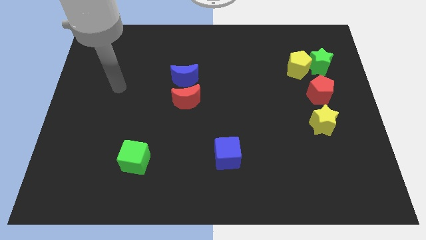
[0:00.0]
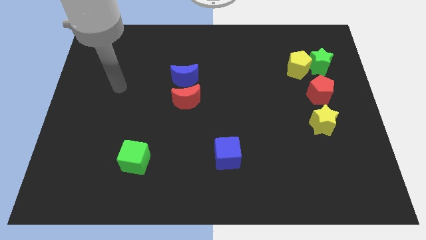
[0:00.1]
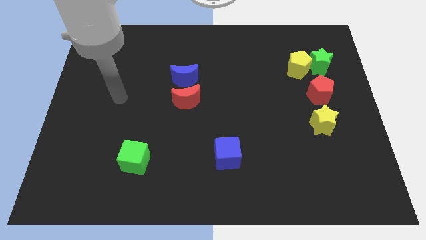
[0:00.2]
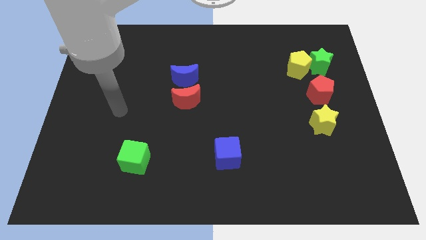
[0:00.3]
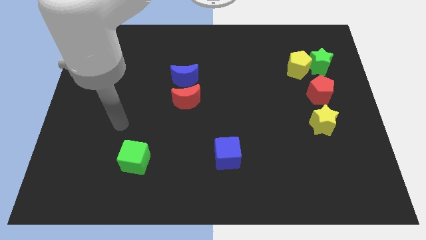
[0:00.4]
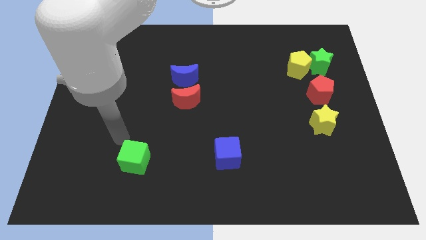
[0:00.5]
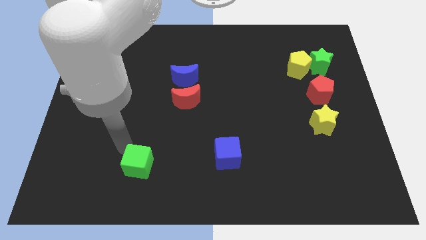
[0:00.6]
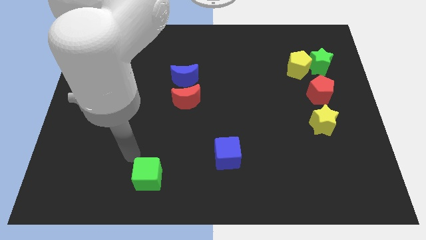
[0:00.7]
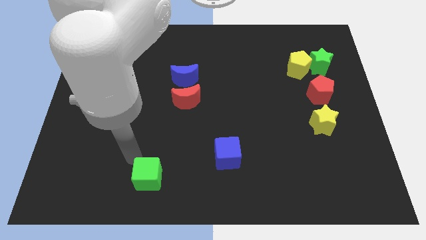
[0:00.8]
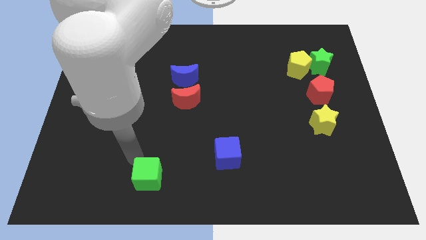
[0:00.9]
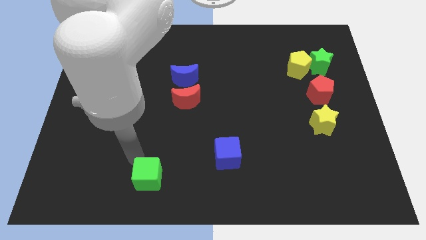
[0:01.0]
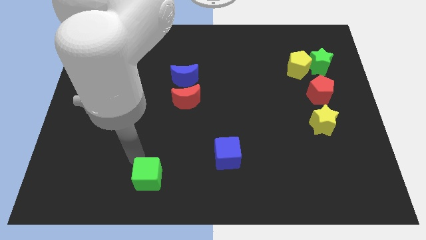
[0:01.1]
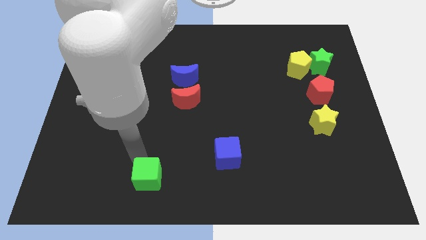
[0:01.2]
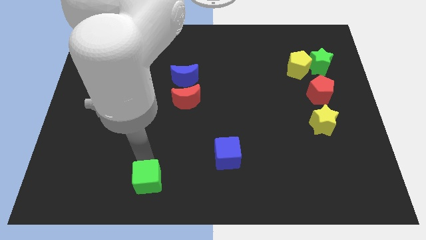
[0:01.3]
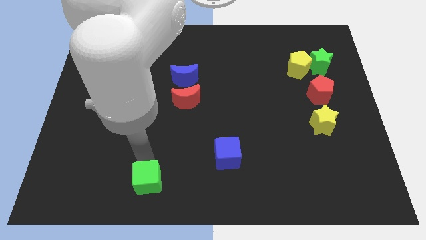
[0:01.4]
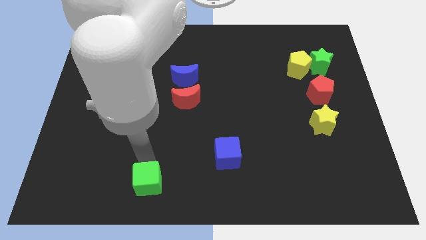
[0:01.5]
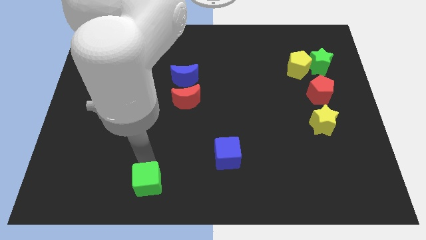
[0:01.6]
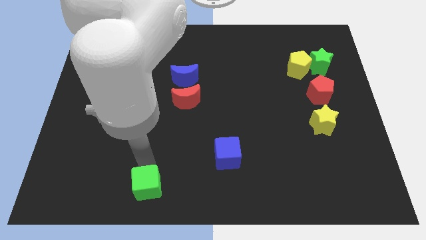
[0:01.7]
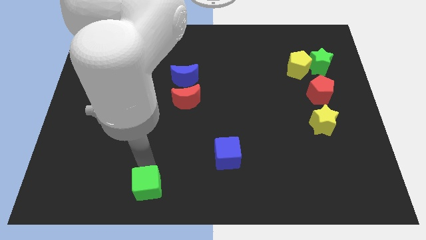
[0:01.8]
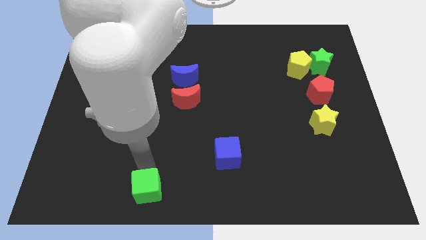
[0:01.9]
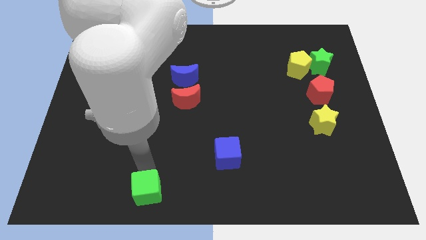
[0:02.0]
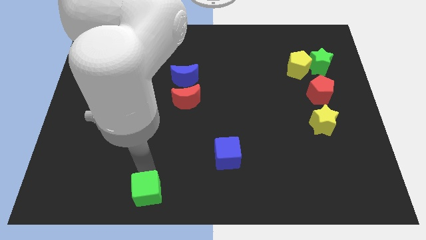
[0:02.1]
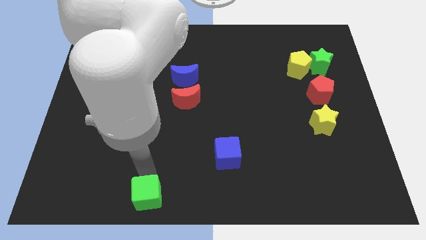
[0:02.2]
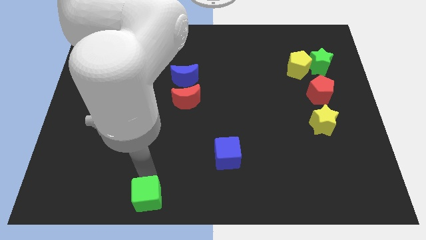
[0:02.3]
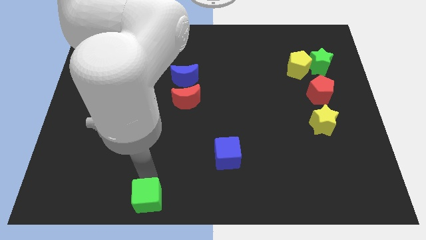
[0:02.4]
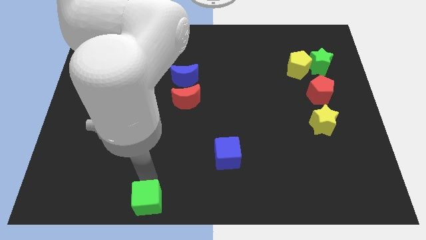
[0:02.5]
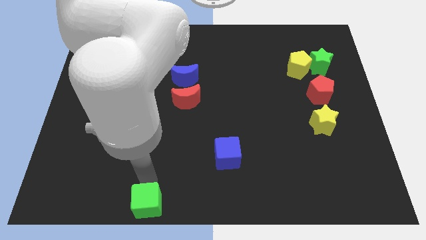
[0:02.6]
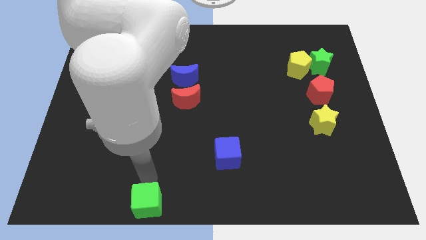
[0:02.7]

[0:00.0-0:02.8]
push the green cube to the bottom

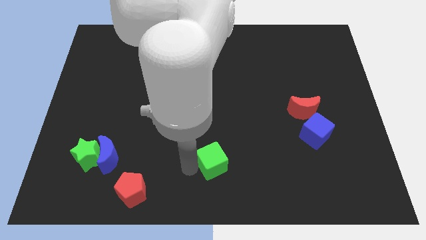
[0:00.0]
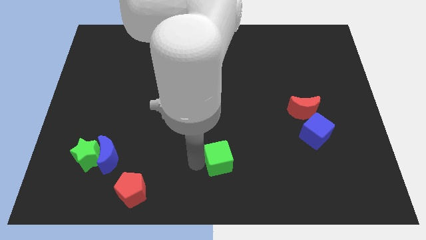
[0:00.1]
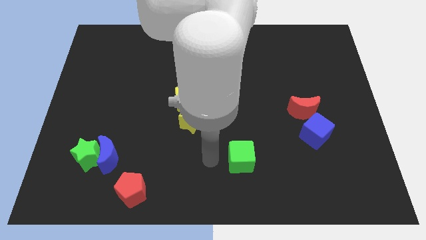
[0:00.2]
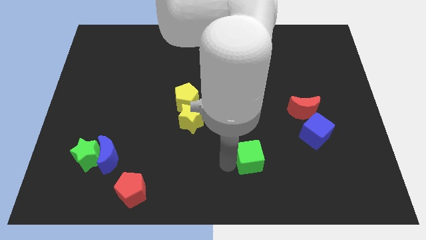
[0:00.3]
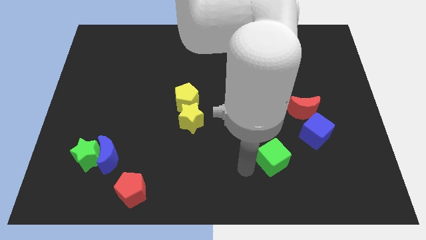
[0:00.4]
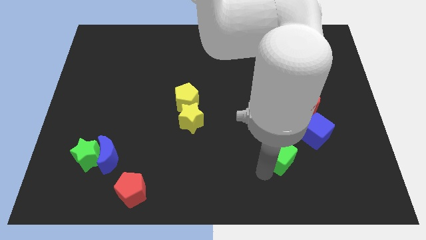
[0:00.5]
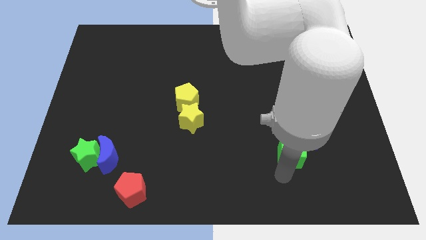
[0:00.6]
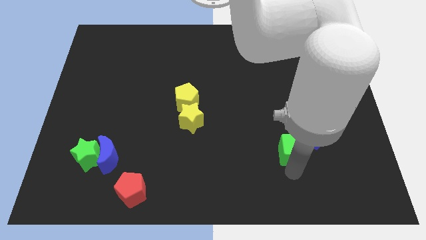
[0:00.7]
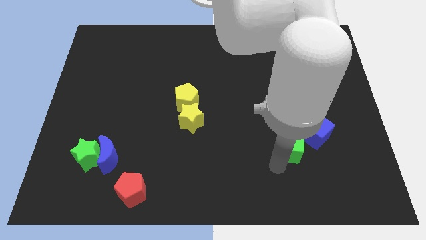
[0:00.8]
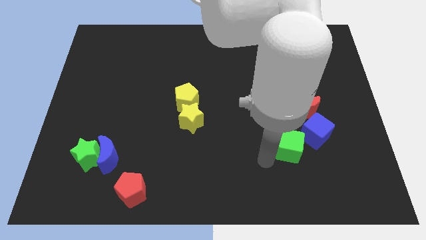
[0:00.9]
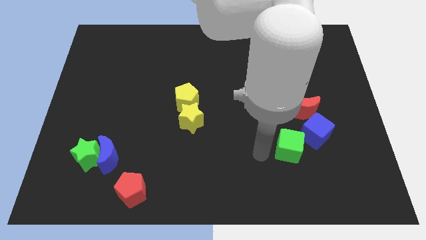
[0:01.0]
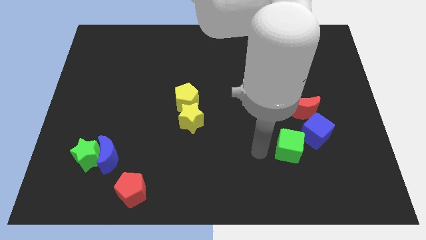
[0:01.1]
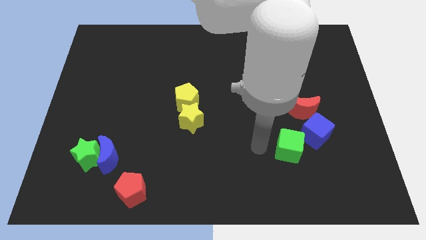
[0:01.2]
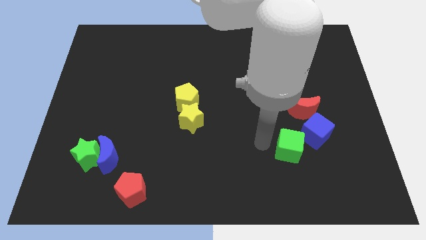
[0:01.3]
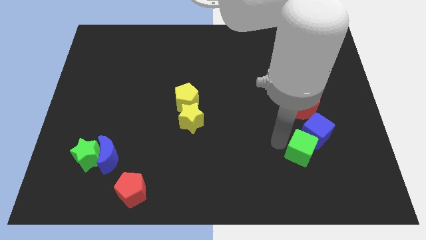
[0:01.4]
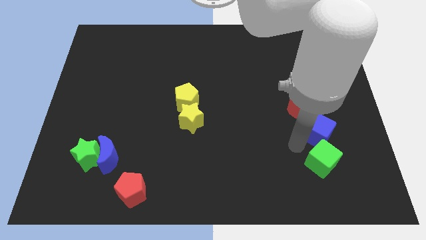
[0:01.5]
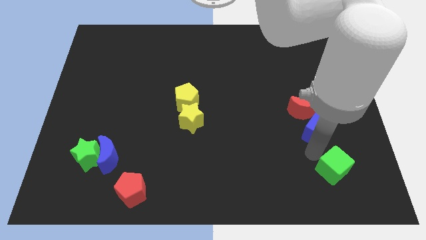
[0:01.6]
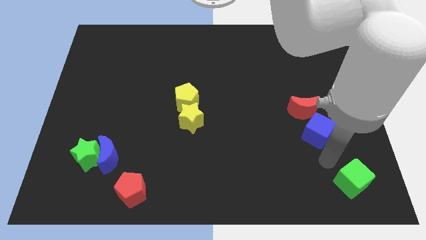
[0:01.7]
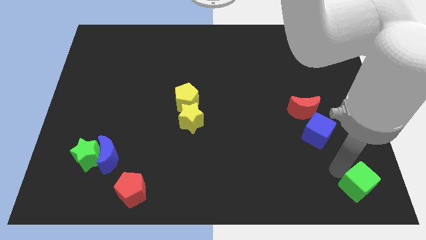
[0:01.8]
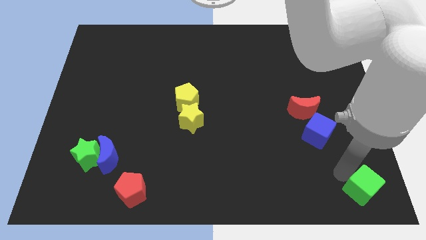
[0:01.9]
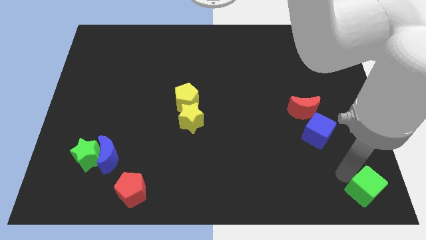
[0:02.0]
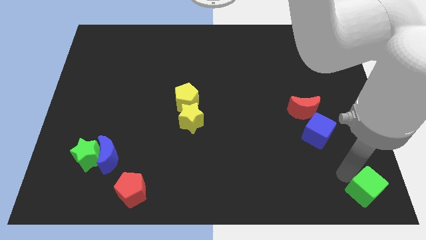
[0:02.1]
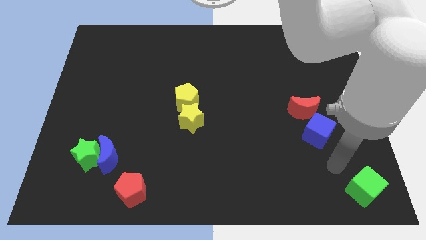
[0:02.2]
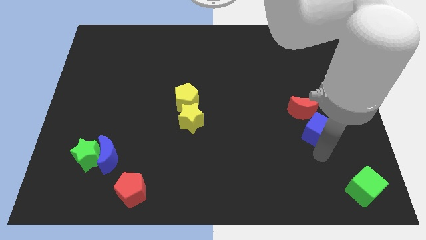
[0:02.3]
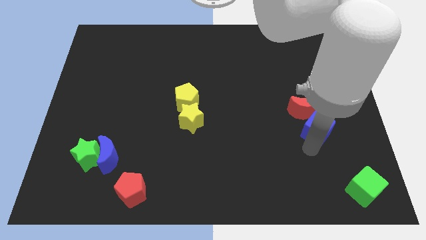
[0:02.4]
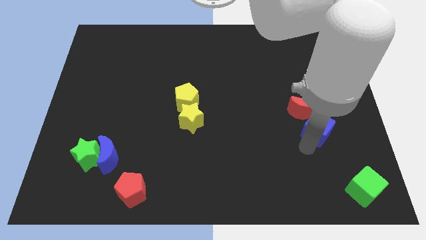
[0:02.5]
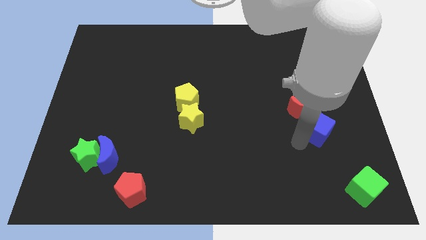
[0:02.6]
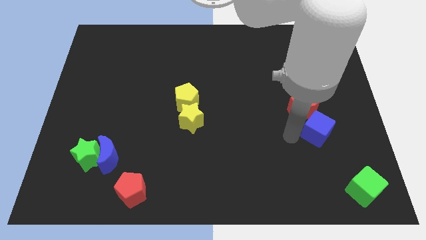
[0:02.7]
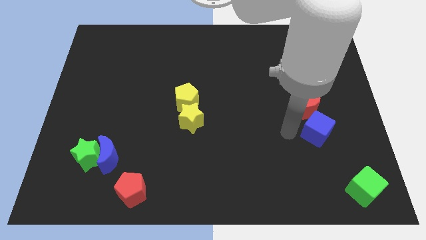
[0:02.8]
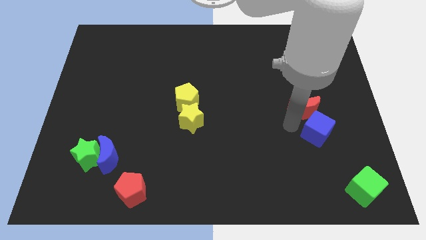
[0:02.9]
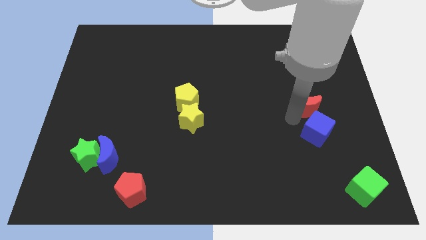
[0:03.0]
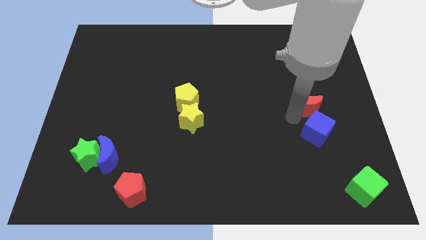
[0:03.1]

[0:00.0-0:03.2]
slide the green cube diagonally bottom right to the blue cube

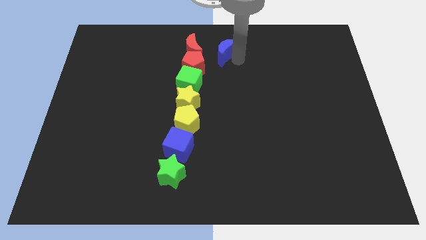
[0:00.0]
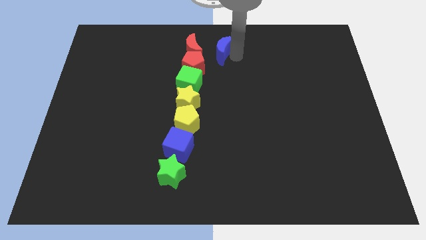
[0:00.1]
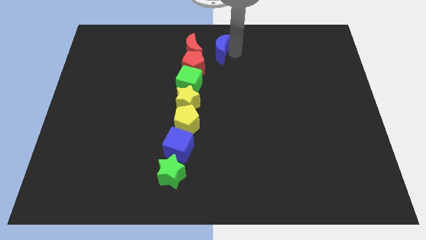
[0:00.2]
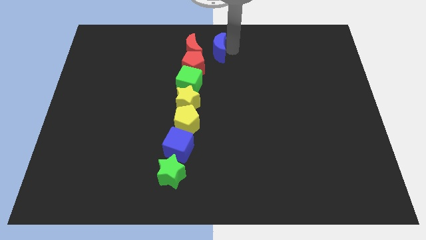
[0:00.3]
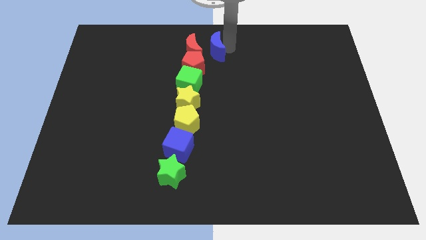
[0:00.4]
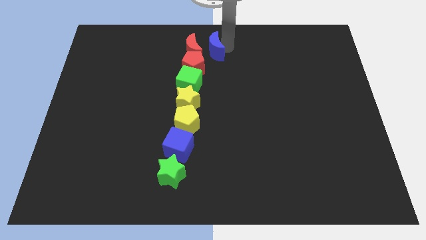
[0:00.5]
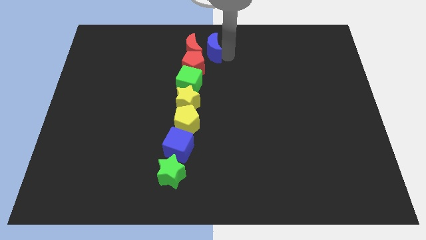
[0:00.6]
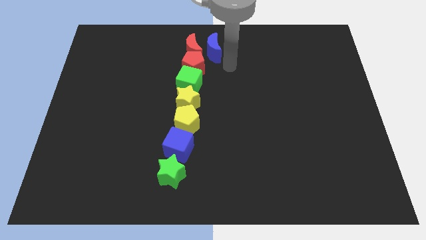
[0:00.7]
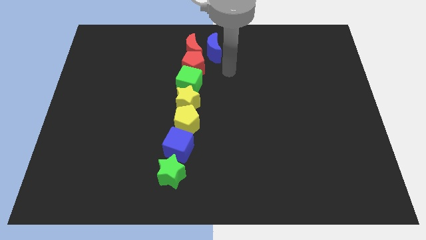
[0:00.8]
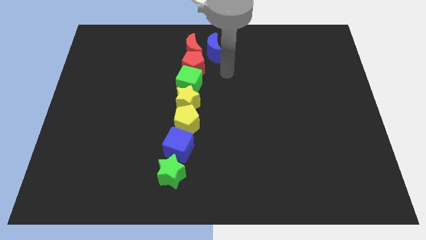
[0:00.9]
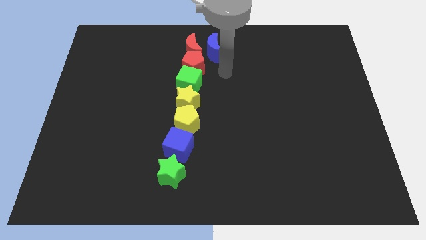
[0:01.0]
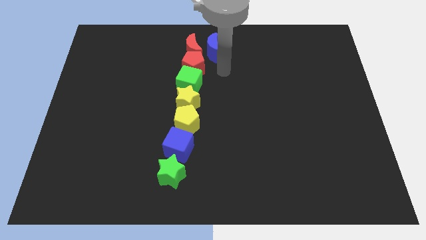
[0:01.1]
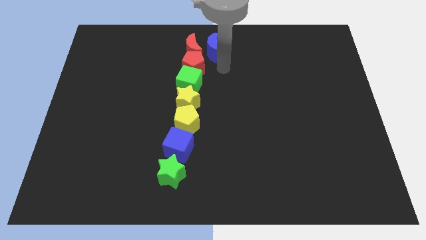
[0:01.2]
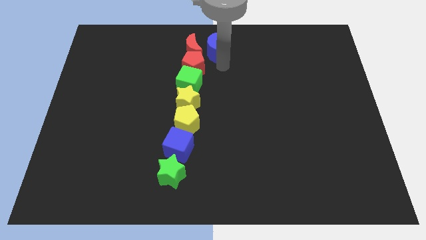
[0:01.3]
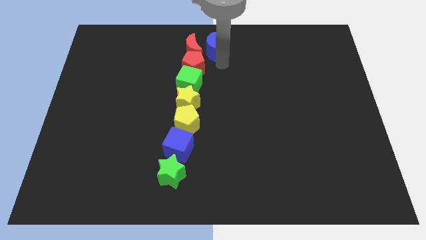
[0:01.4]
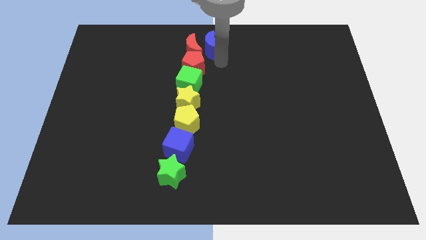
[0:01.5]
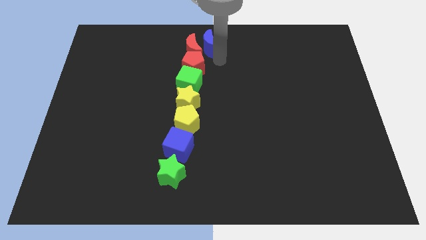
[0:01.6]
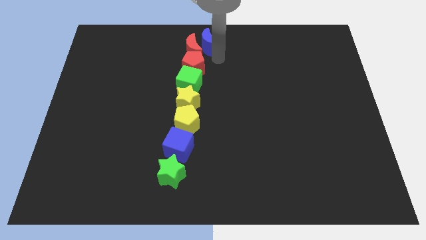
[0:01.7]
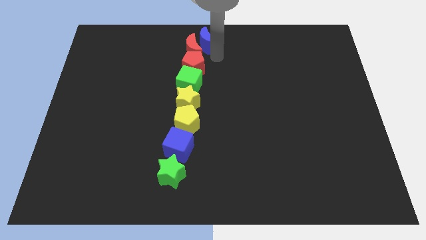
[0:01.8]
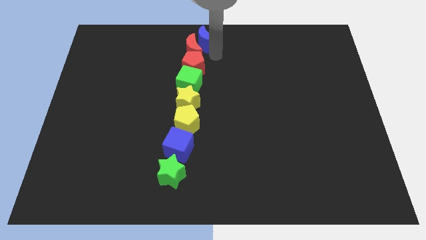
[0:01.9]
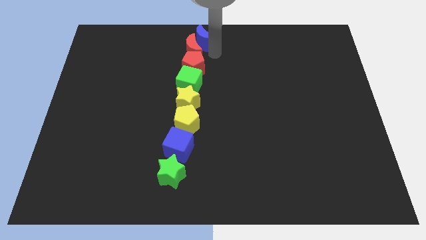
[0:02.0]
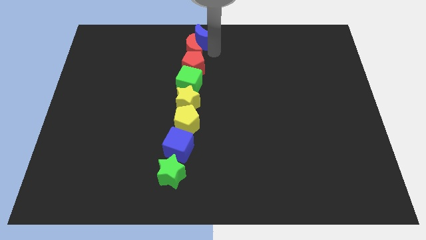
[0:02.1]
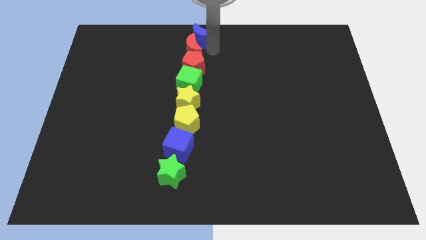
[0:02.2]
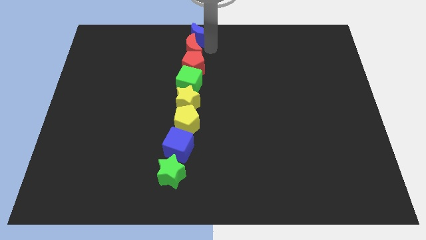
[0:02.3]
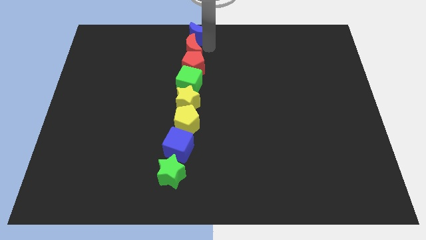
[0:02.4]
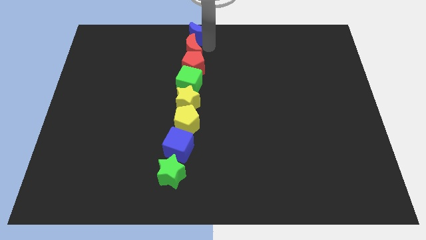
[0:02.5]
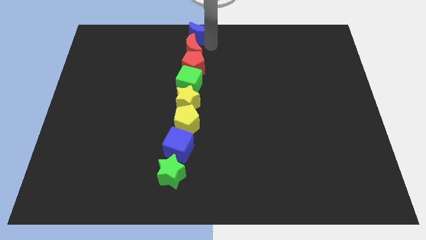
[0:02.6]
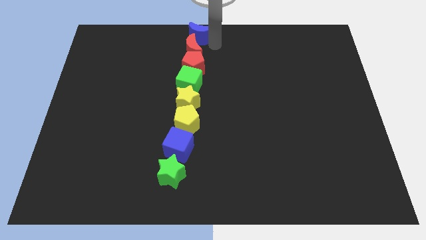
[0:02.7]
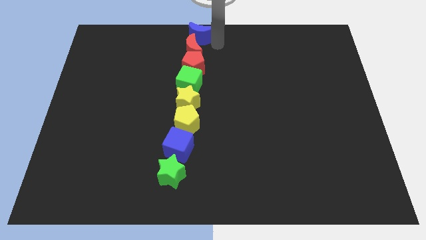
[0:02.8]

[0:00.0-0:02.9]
place the blue moon to the top middle of the board

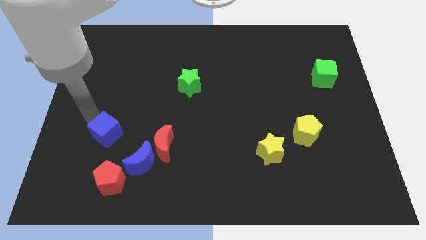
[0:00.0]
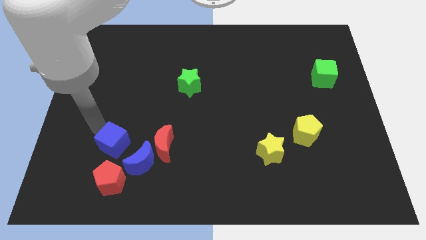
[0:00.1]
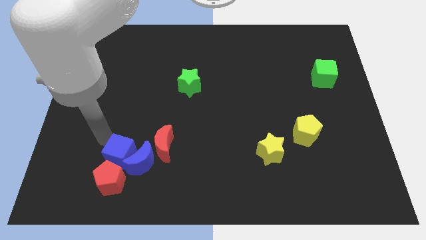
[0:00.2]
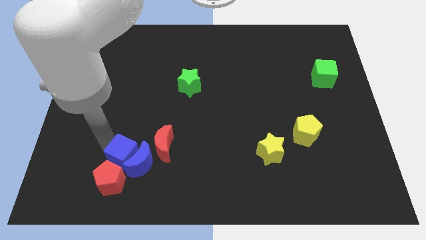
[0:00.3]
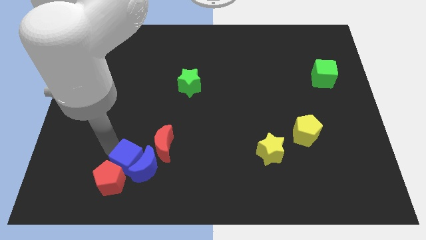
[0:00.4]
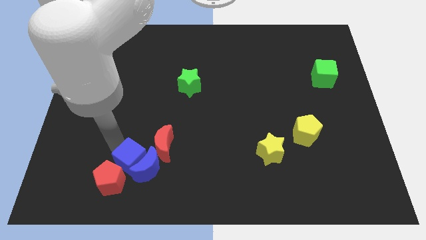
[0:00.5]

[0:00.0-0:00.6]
push the blue cube into the blue crescent
